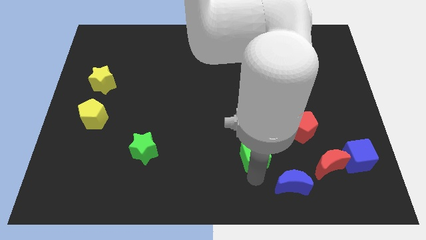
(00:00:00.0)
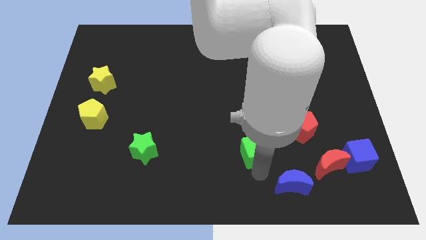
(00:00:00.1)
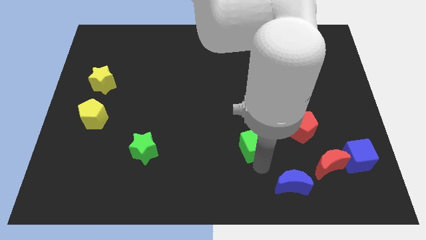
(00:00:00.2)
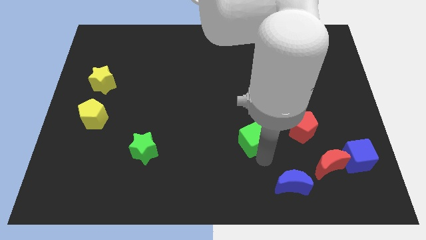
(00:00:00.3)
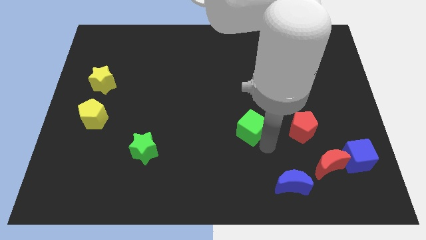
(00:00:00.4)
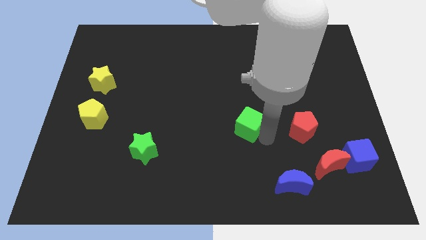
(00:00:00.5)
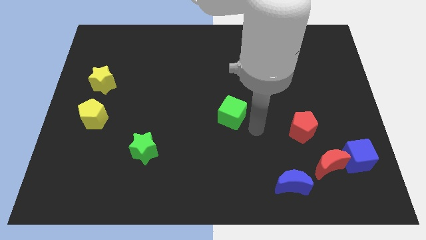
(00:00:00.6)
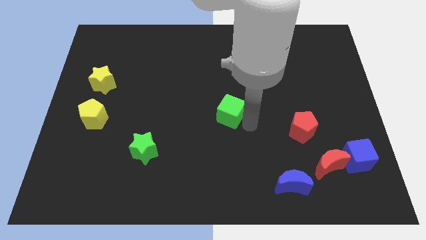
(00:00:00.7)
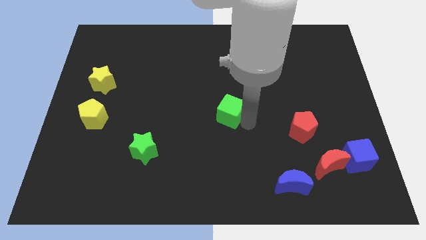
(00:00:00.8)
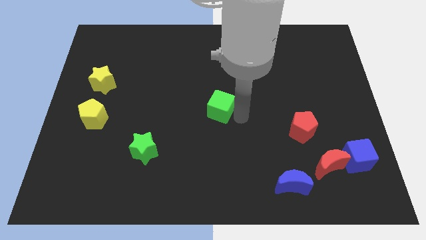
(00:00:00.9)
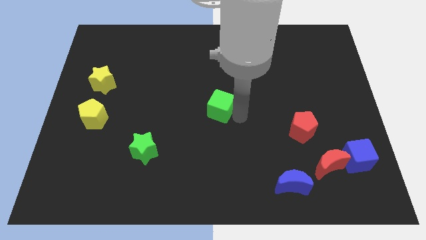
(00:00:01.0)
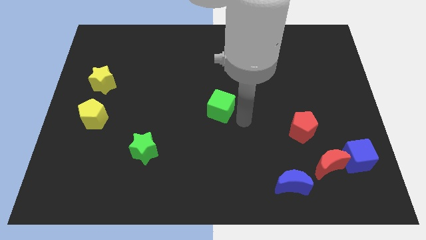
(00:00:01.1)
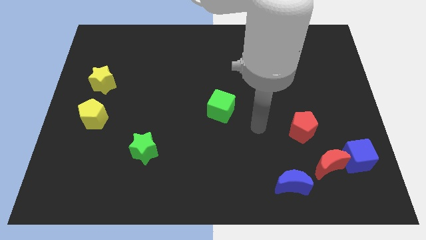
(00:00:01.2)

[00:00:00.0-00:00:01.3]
place the green cube at the center of the board

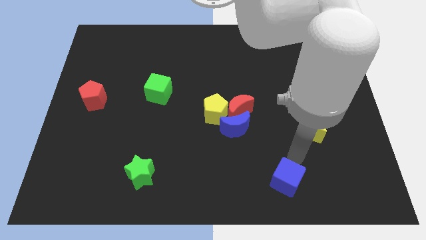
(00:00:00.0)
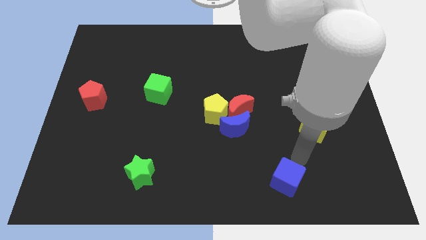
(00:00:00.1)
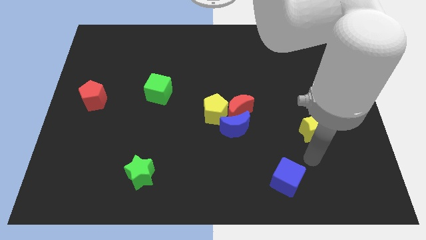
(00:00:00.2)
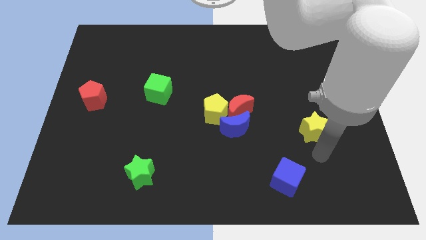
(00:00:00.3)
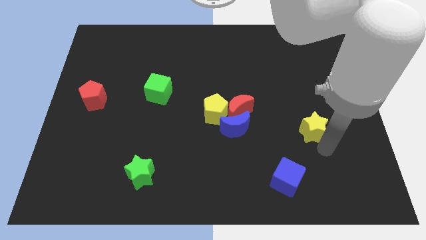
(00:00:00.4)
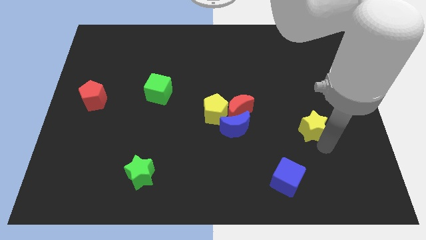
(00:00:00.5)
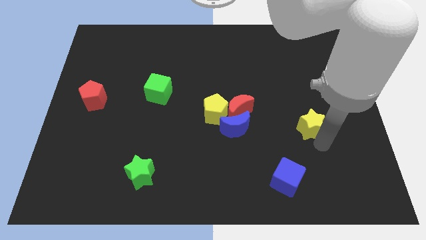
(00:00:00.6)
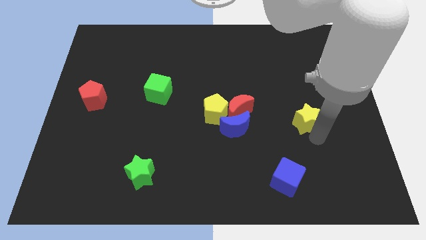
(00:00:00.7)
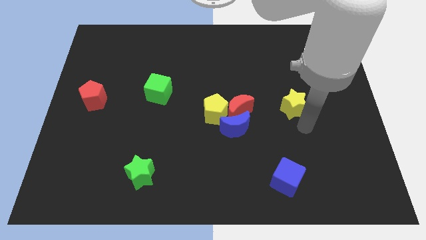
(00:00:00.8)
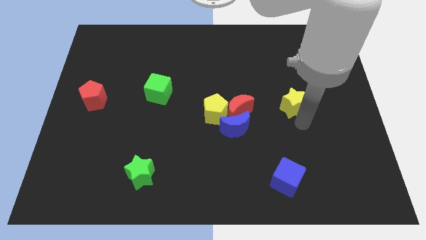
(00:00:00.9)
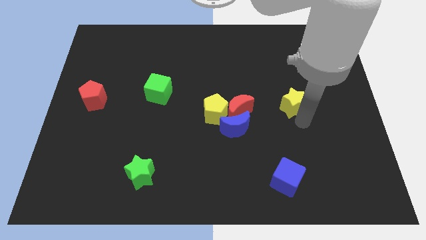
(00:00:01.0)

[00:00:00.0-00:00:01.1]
push the yellow star to the top

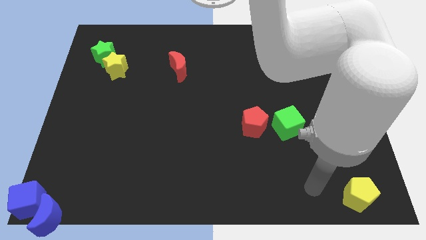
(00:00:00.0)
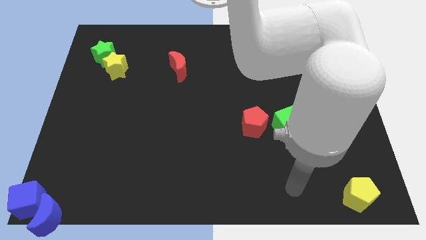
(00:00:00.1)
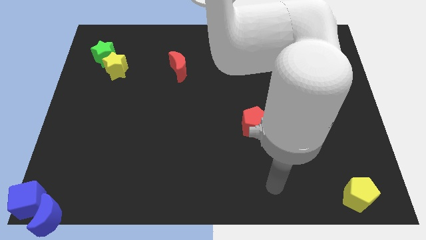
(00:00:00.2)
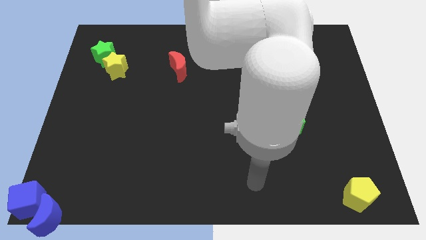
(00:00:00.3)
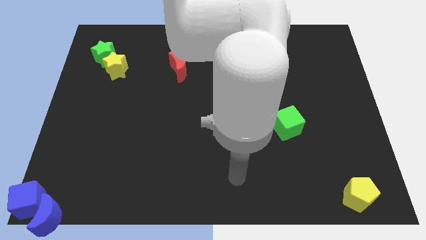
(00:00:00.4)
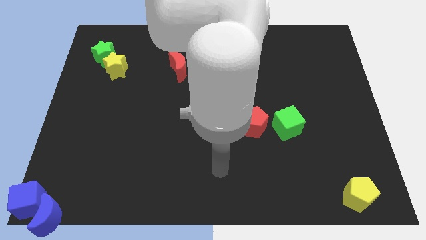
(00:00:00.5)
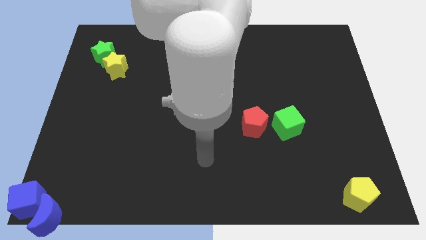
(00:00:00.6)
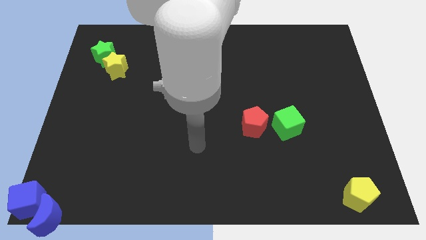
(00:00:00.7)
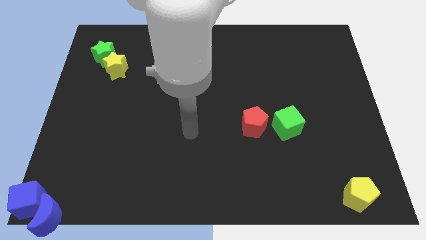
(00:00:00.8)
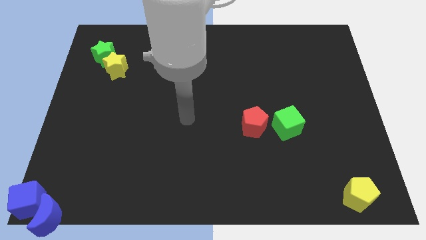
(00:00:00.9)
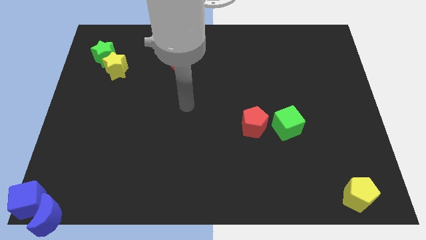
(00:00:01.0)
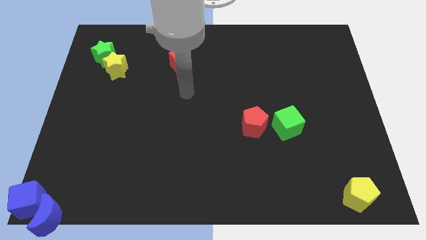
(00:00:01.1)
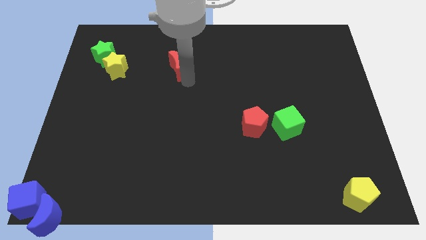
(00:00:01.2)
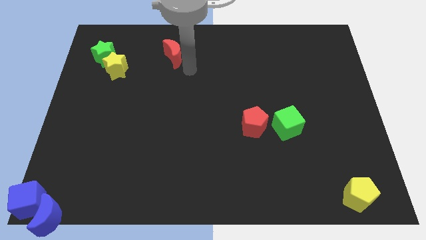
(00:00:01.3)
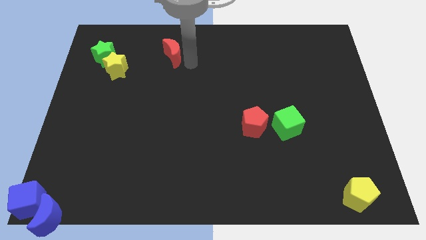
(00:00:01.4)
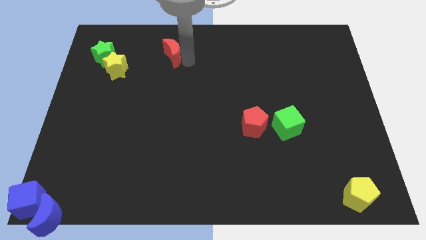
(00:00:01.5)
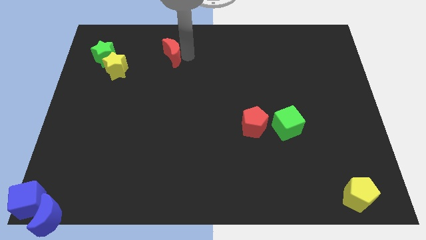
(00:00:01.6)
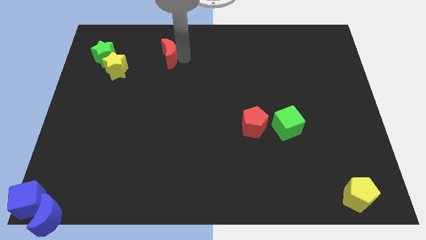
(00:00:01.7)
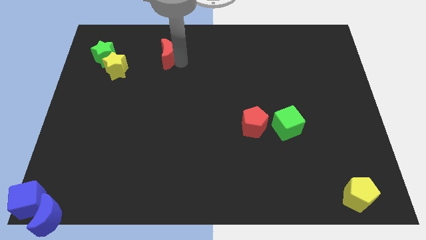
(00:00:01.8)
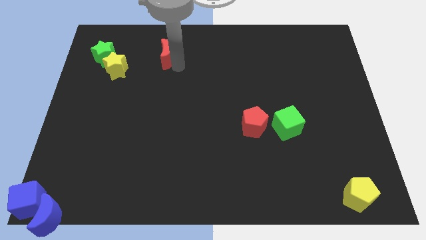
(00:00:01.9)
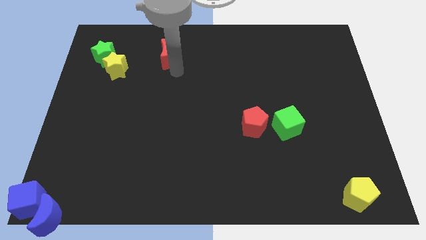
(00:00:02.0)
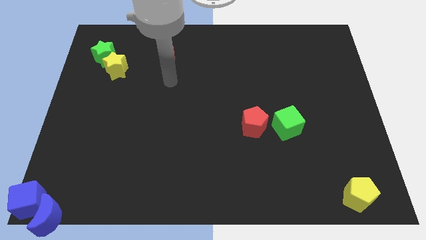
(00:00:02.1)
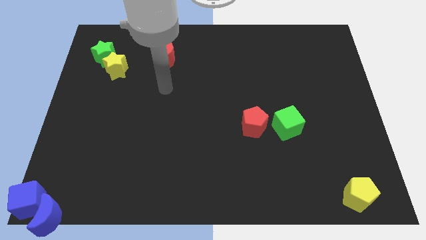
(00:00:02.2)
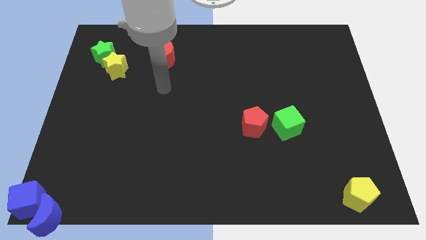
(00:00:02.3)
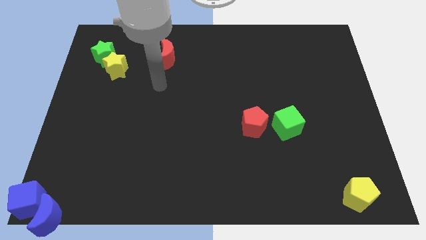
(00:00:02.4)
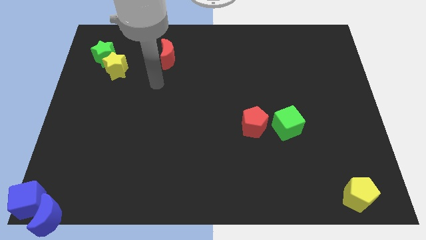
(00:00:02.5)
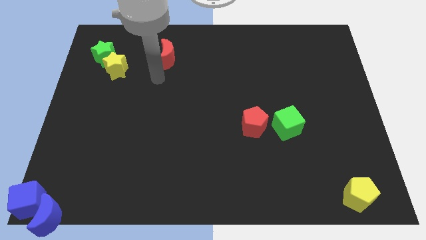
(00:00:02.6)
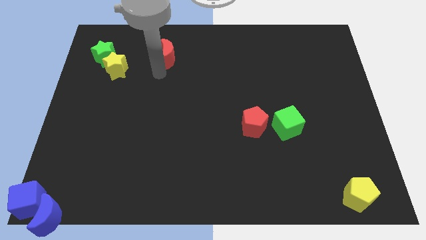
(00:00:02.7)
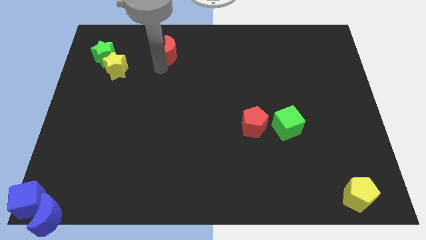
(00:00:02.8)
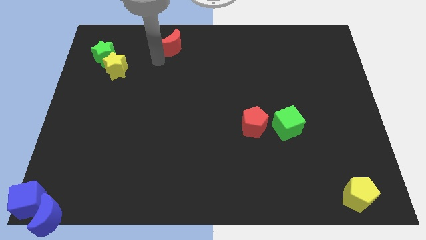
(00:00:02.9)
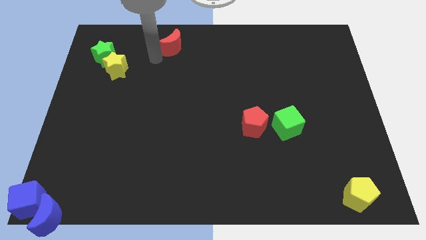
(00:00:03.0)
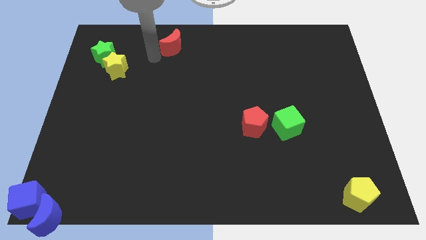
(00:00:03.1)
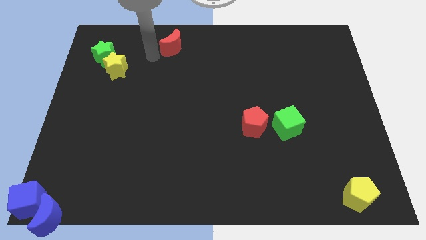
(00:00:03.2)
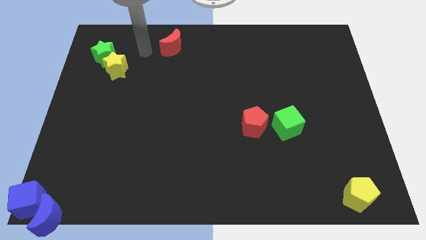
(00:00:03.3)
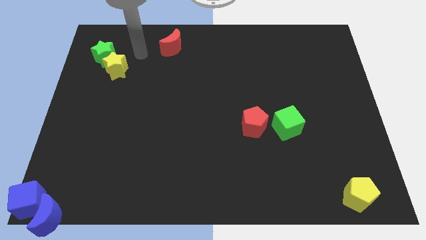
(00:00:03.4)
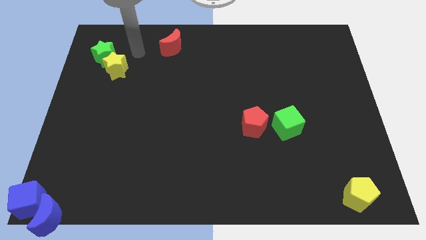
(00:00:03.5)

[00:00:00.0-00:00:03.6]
push the red crescent slightly to the top of the board

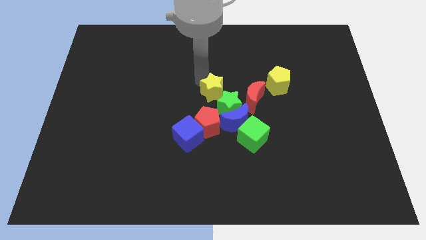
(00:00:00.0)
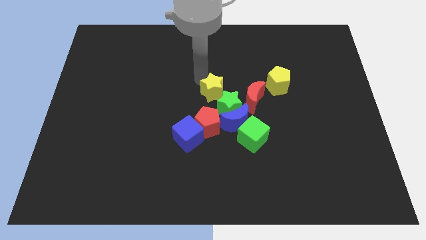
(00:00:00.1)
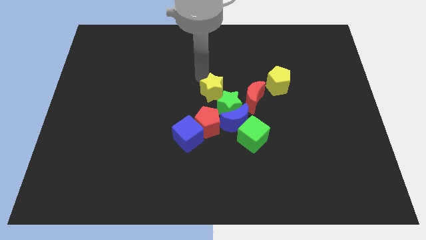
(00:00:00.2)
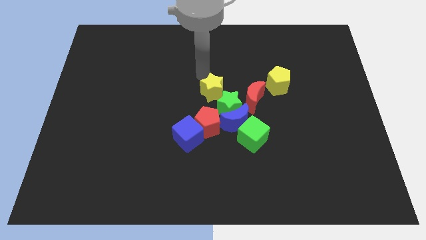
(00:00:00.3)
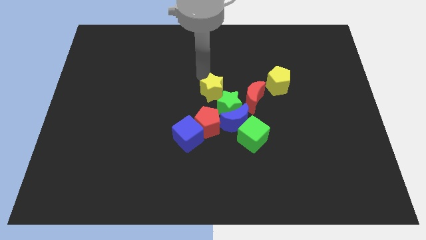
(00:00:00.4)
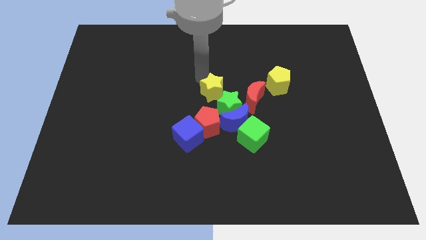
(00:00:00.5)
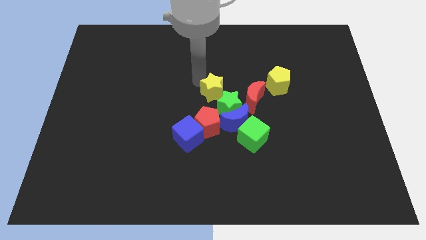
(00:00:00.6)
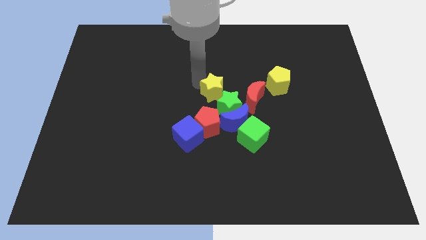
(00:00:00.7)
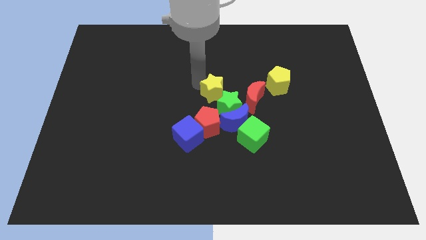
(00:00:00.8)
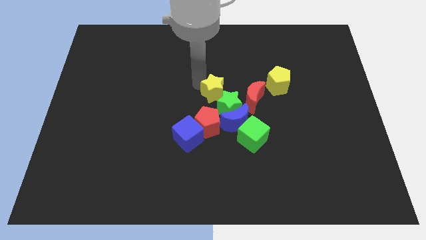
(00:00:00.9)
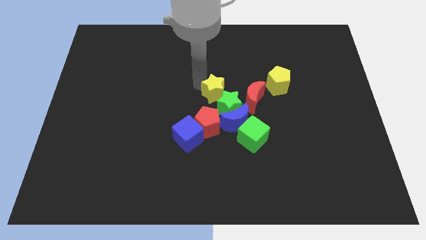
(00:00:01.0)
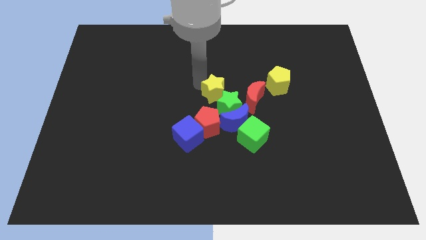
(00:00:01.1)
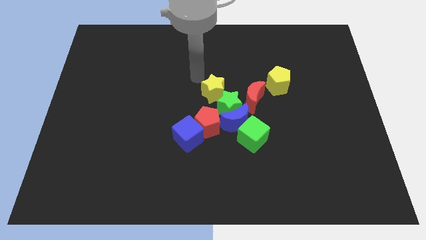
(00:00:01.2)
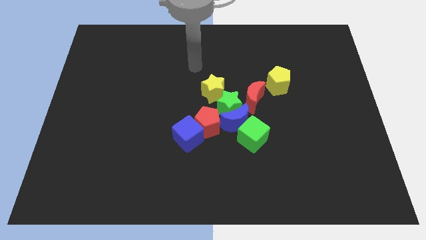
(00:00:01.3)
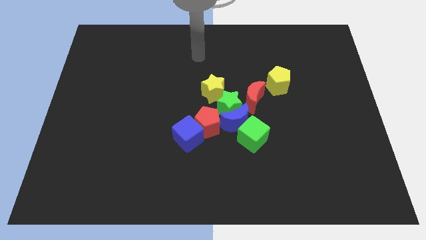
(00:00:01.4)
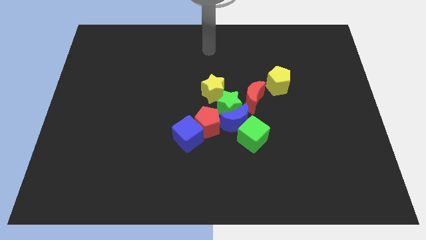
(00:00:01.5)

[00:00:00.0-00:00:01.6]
move the yellow star close to the green star

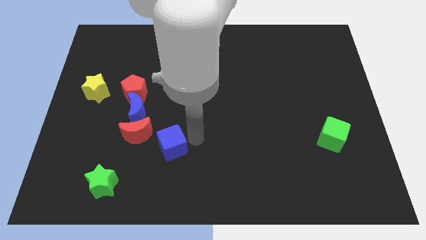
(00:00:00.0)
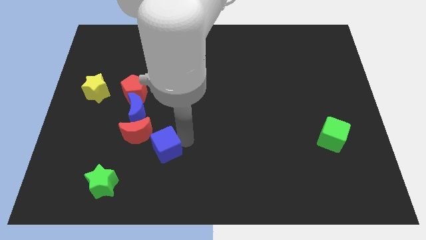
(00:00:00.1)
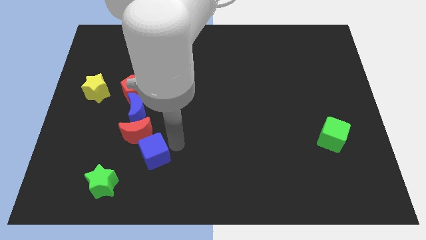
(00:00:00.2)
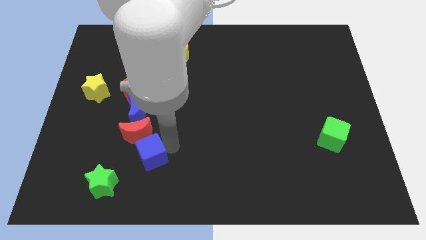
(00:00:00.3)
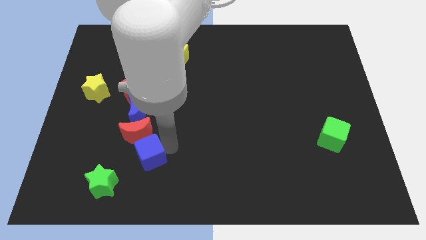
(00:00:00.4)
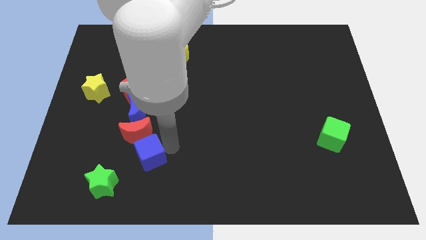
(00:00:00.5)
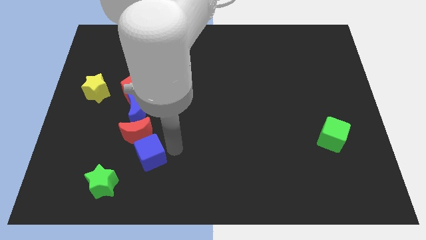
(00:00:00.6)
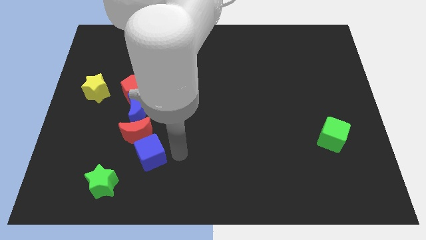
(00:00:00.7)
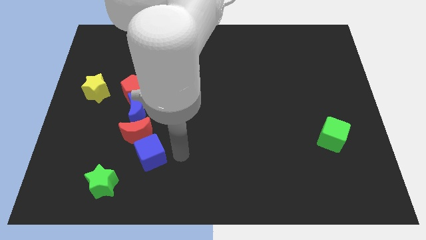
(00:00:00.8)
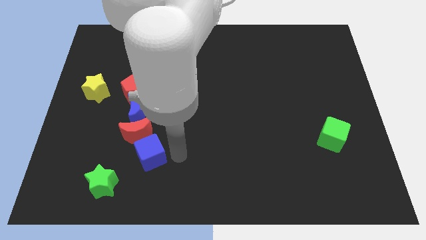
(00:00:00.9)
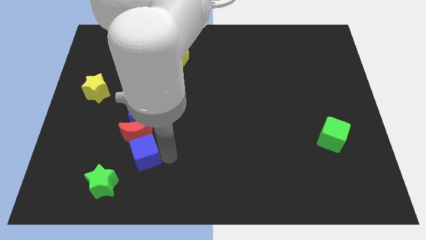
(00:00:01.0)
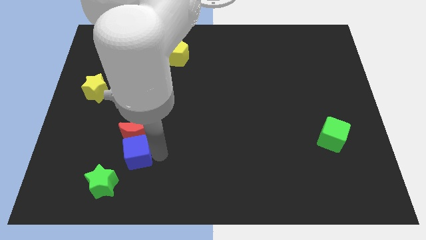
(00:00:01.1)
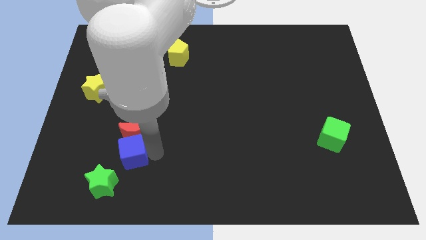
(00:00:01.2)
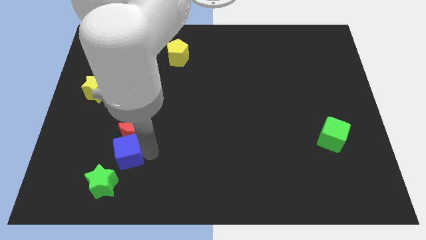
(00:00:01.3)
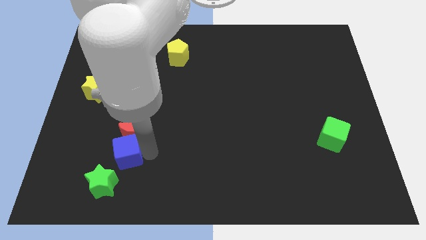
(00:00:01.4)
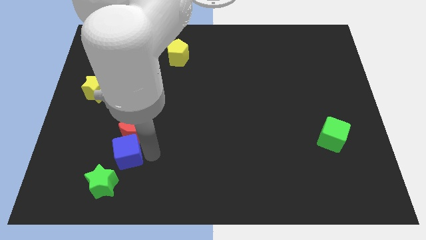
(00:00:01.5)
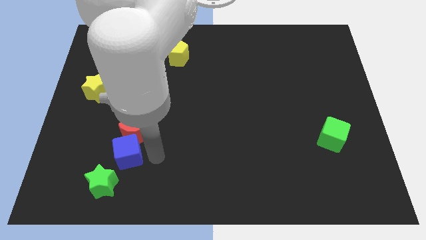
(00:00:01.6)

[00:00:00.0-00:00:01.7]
place the blue cube below the red moon
